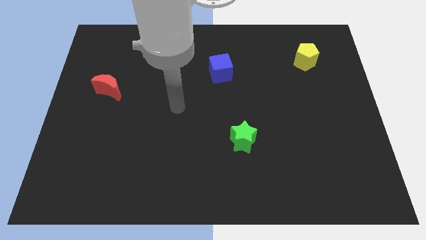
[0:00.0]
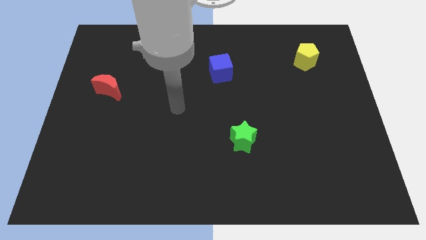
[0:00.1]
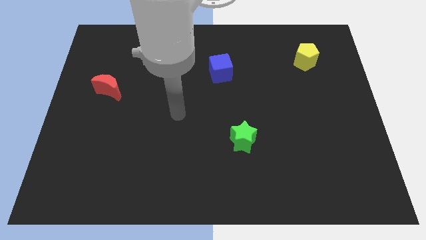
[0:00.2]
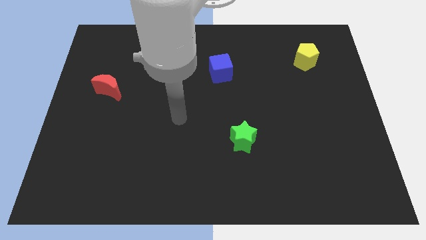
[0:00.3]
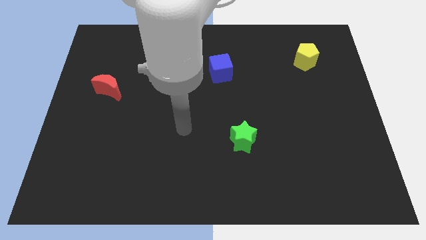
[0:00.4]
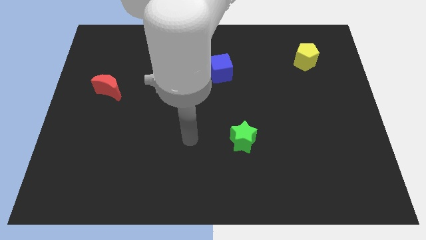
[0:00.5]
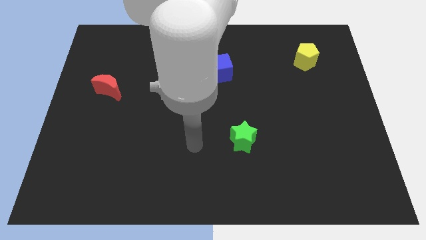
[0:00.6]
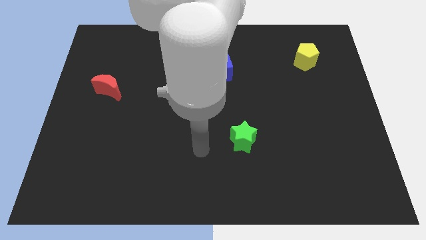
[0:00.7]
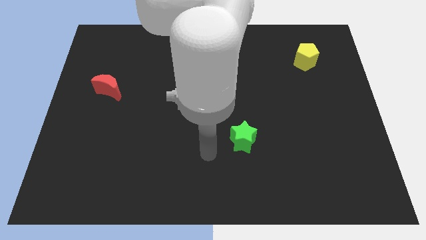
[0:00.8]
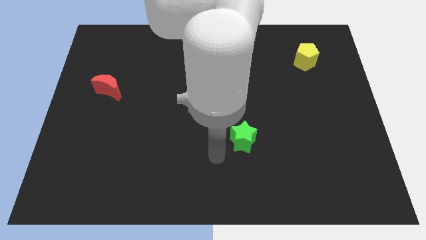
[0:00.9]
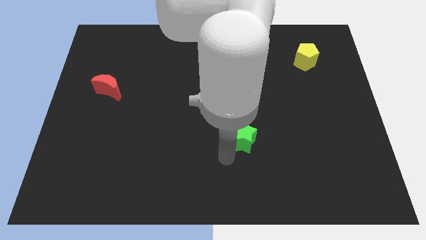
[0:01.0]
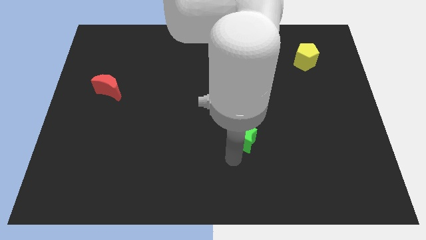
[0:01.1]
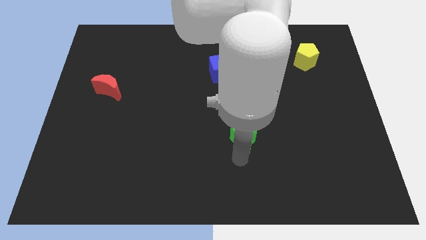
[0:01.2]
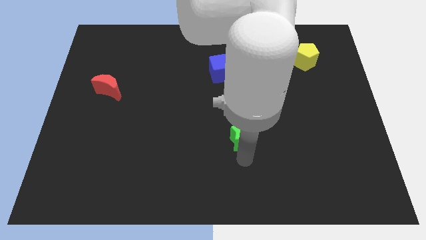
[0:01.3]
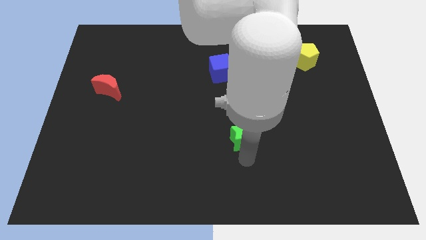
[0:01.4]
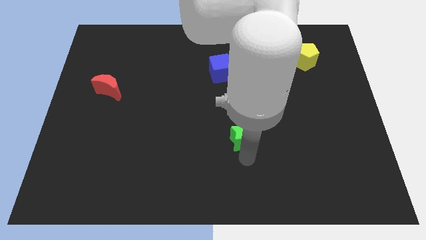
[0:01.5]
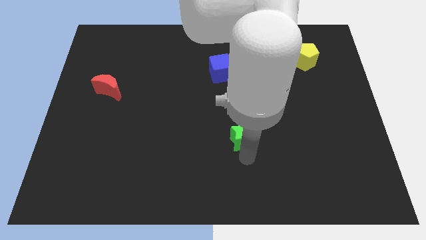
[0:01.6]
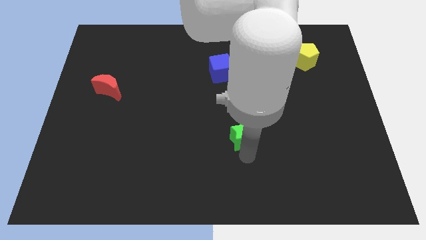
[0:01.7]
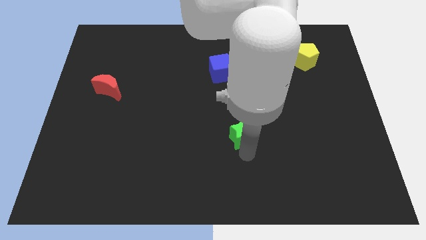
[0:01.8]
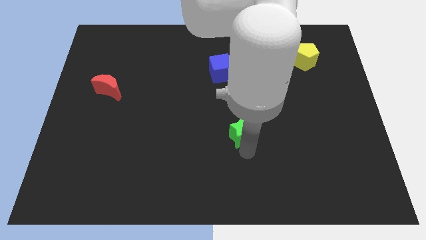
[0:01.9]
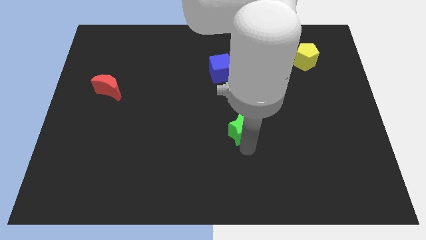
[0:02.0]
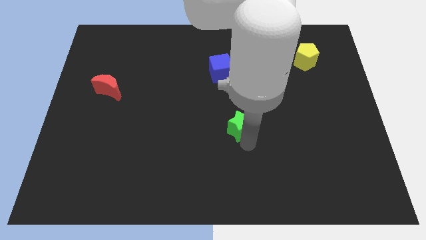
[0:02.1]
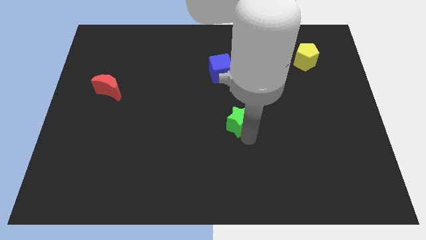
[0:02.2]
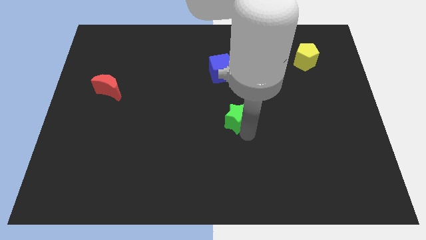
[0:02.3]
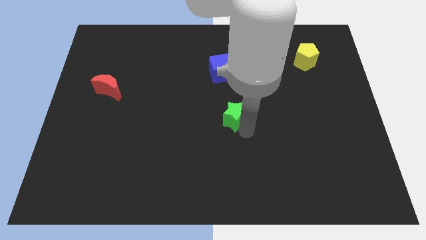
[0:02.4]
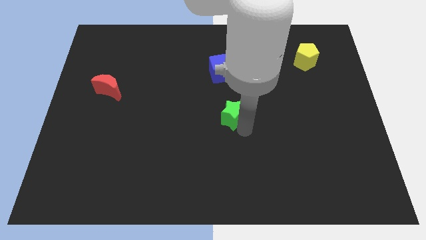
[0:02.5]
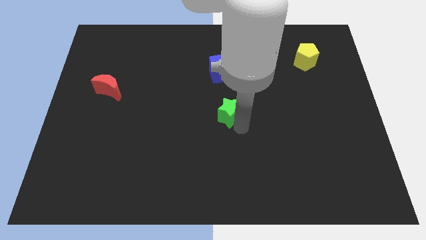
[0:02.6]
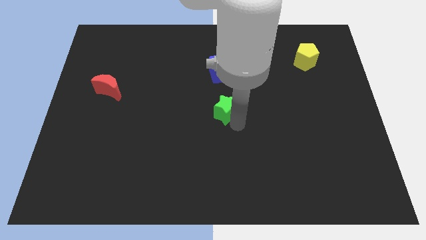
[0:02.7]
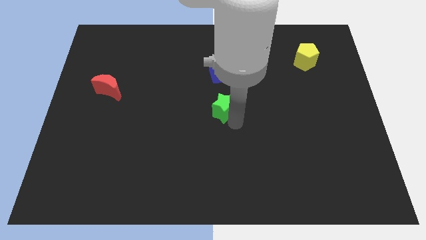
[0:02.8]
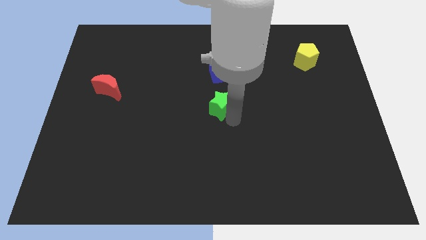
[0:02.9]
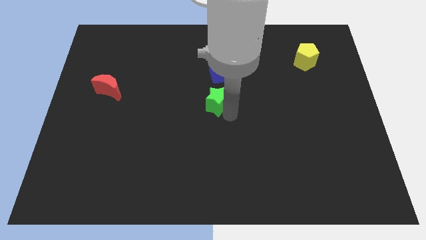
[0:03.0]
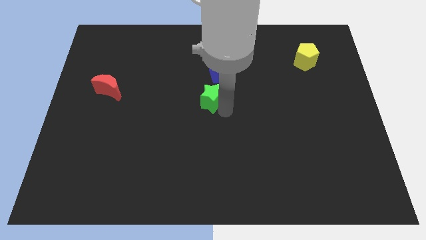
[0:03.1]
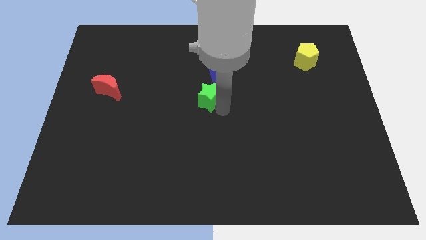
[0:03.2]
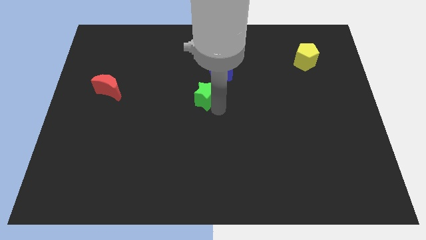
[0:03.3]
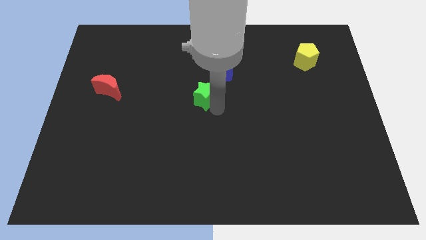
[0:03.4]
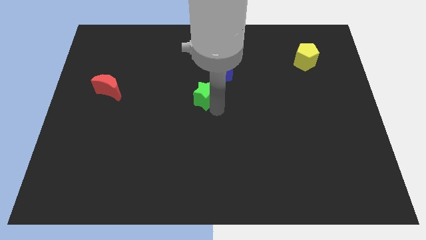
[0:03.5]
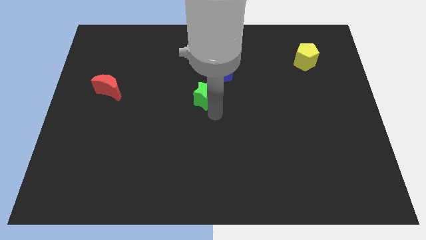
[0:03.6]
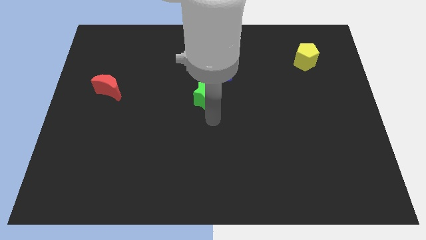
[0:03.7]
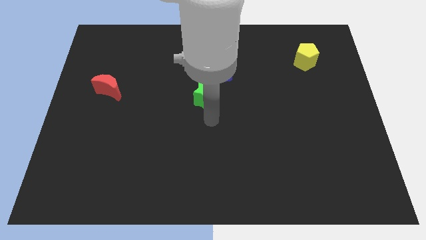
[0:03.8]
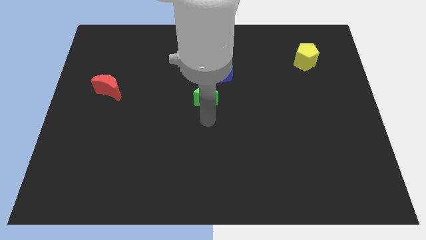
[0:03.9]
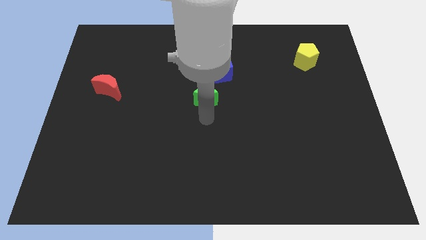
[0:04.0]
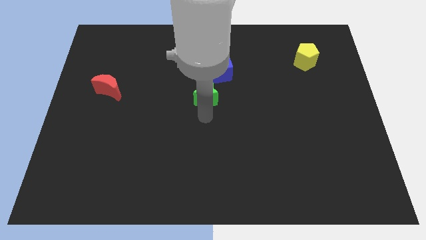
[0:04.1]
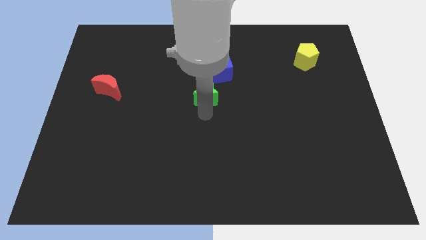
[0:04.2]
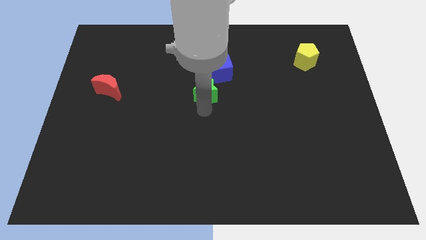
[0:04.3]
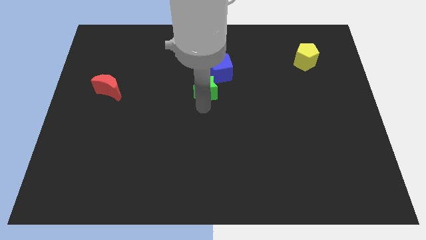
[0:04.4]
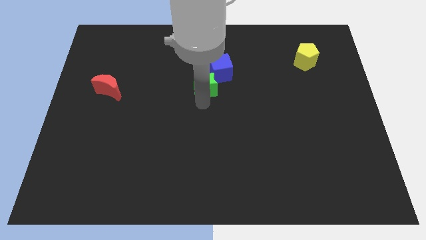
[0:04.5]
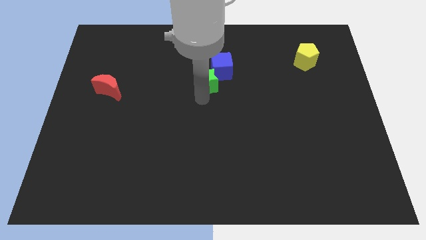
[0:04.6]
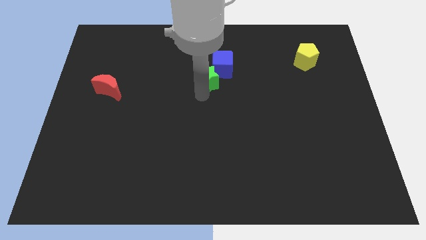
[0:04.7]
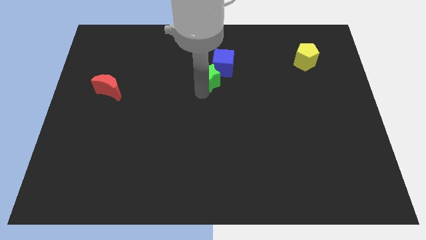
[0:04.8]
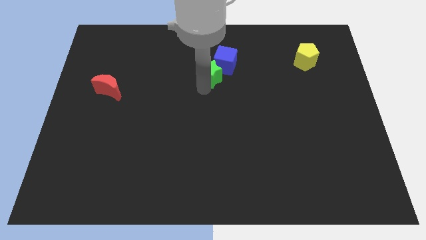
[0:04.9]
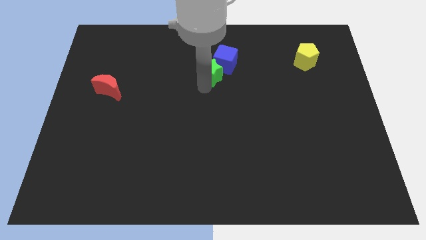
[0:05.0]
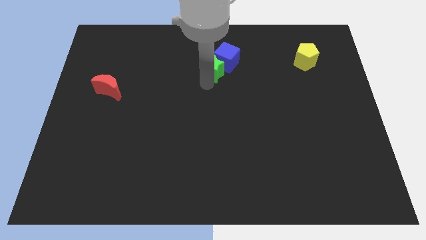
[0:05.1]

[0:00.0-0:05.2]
move the star close to the blue block

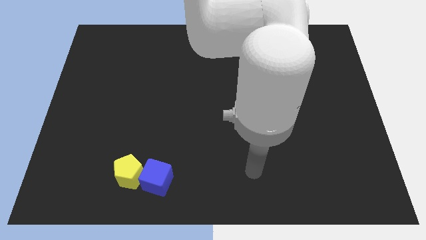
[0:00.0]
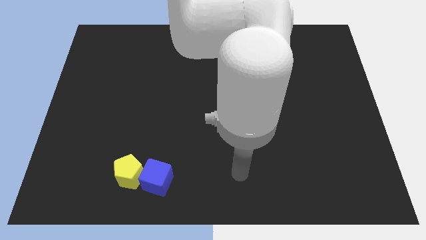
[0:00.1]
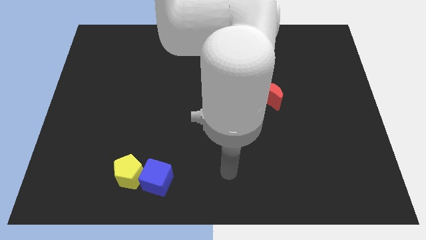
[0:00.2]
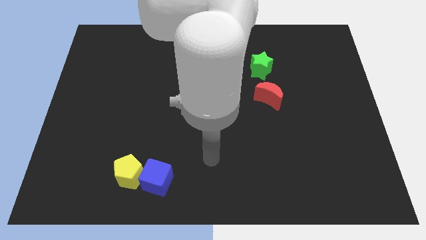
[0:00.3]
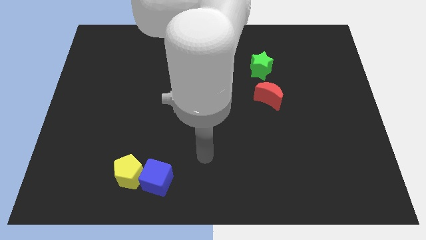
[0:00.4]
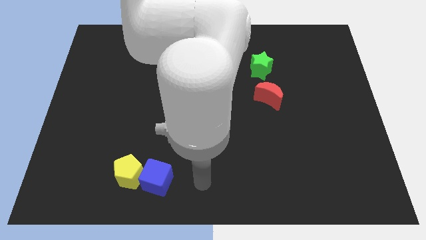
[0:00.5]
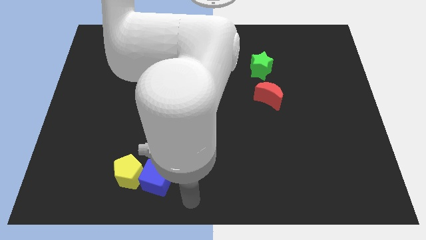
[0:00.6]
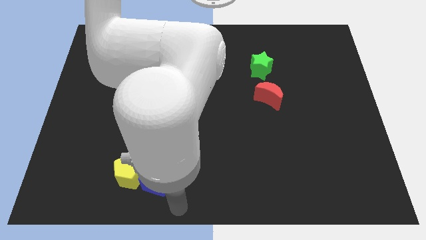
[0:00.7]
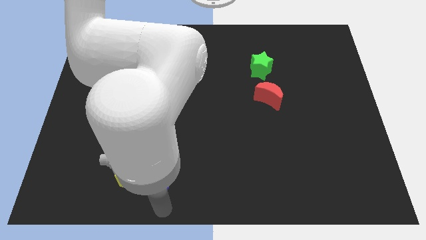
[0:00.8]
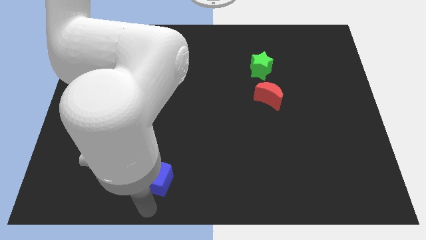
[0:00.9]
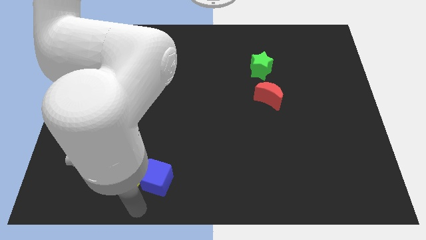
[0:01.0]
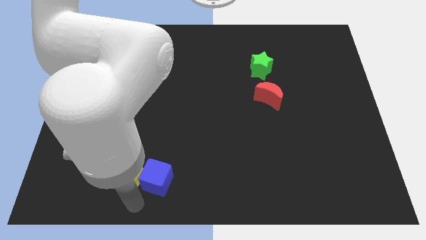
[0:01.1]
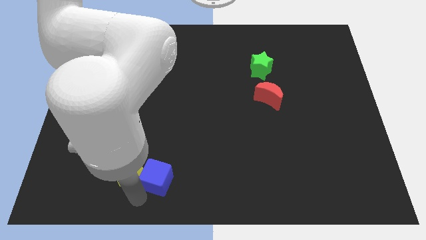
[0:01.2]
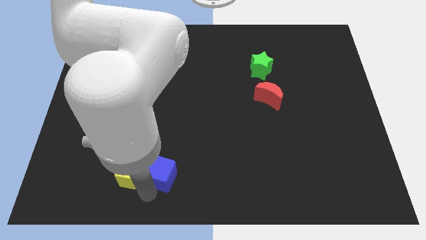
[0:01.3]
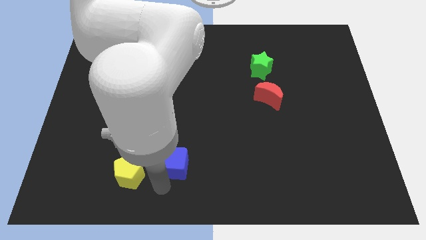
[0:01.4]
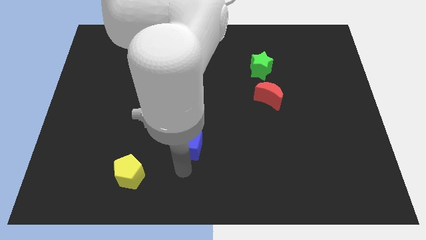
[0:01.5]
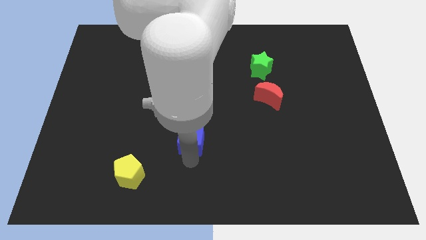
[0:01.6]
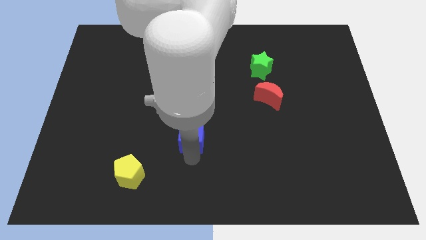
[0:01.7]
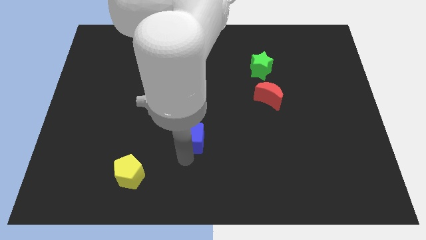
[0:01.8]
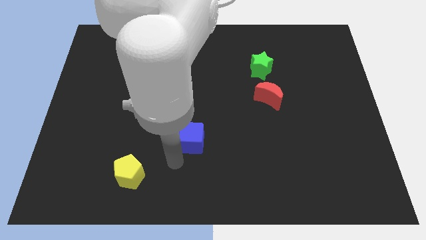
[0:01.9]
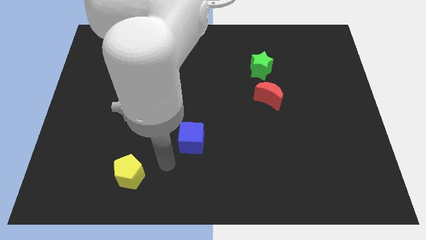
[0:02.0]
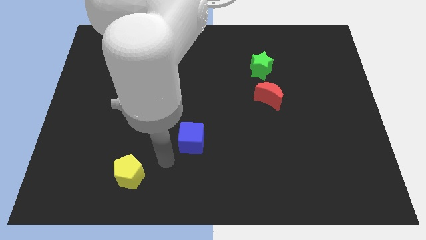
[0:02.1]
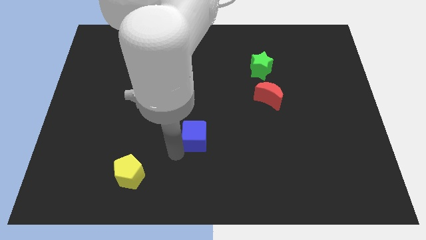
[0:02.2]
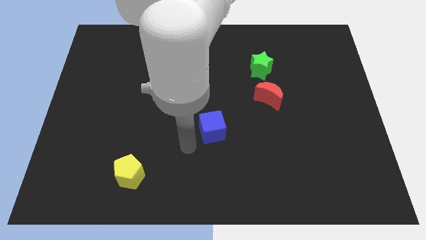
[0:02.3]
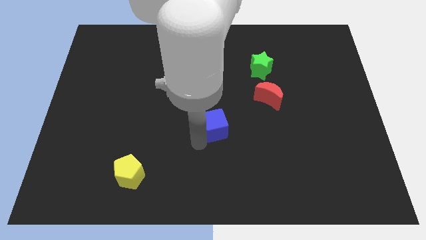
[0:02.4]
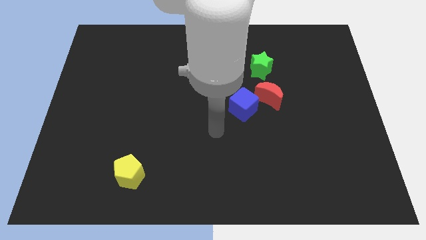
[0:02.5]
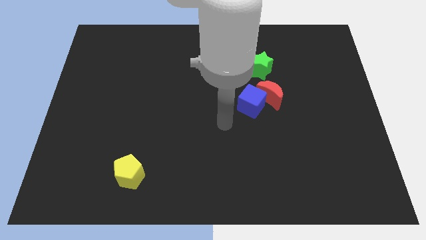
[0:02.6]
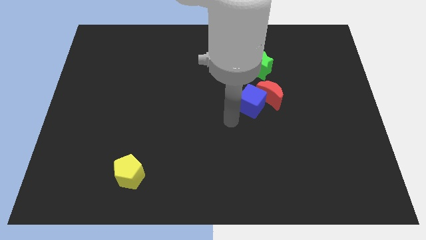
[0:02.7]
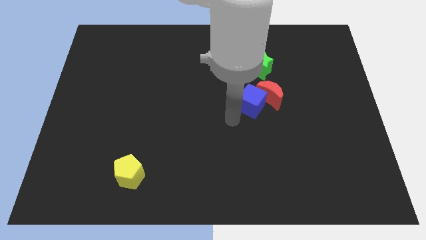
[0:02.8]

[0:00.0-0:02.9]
push the blue block next to the moon
